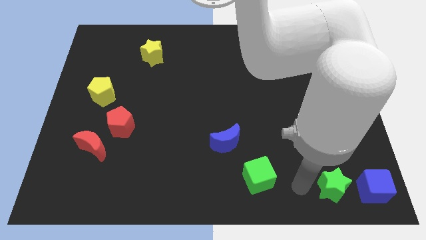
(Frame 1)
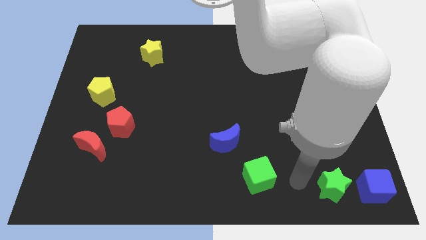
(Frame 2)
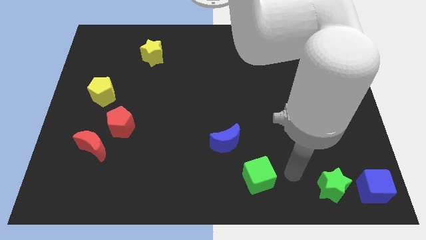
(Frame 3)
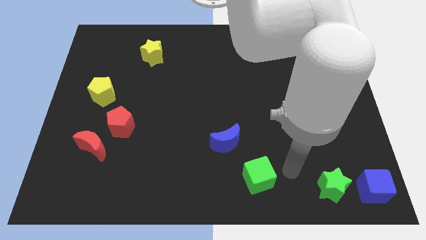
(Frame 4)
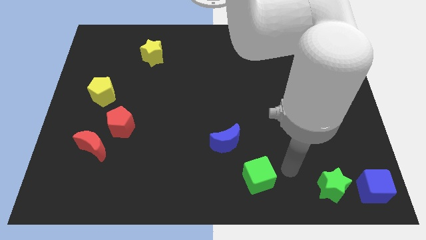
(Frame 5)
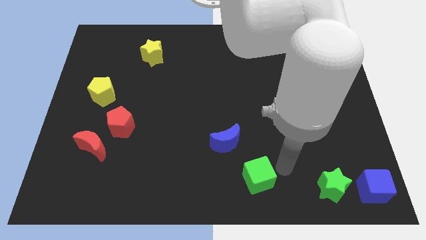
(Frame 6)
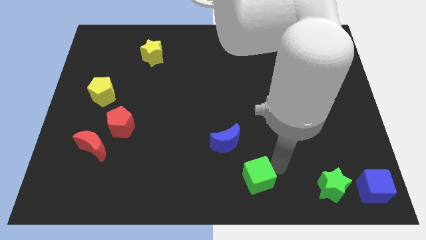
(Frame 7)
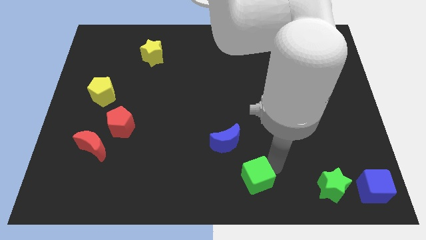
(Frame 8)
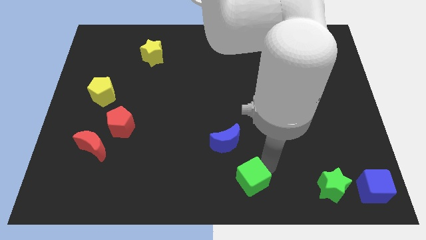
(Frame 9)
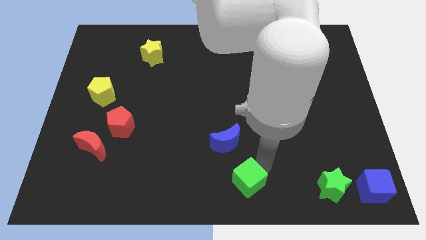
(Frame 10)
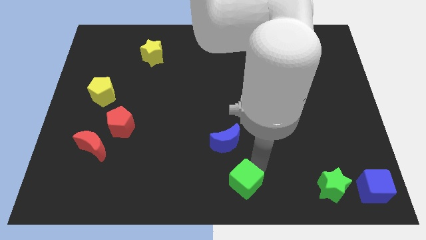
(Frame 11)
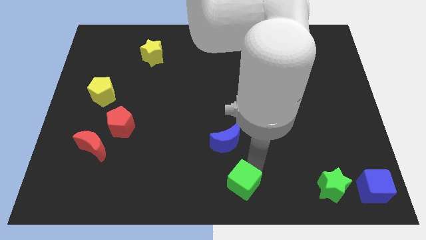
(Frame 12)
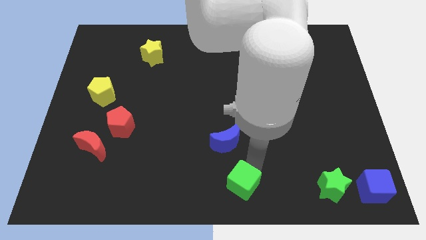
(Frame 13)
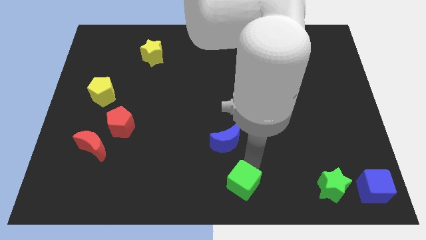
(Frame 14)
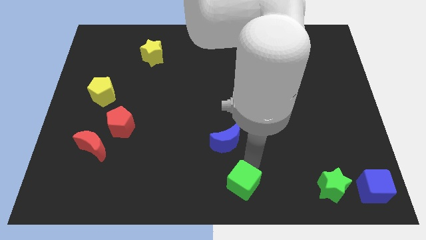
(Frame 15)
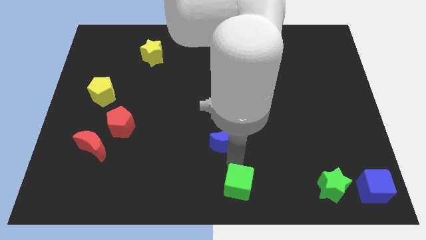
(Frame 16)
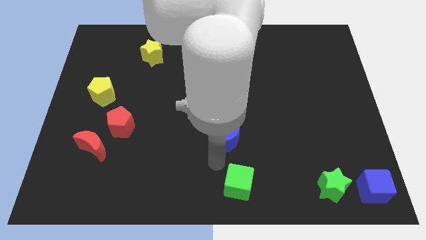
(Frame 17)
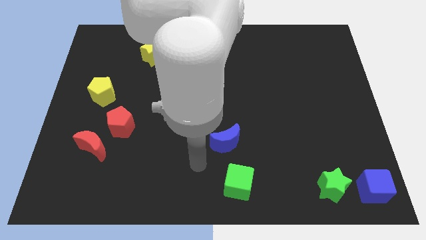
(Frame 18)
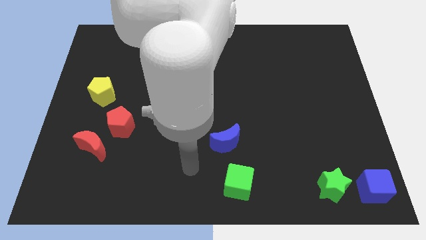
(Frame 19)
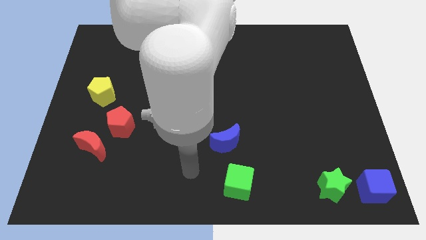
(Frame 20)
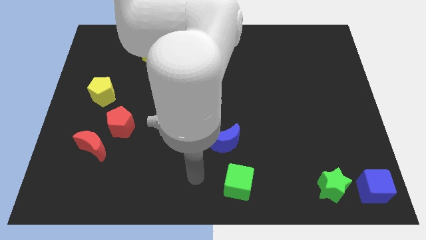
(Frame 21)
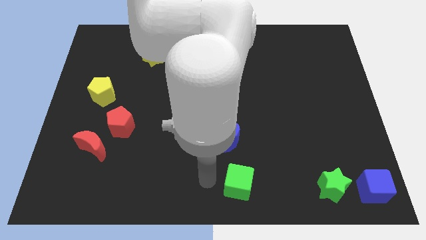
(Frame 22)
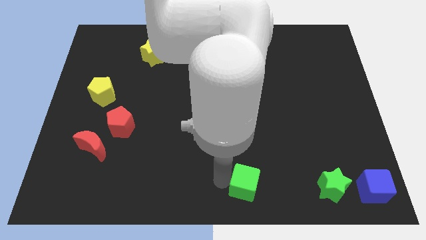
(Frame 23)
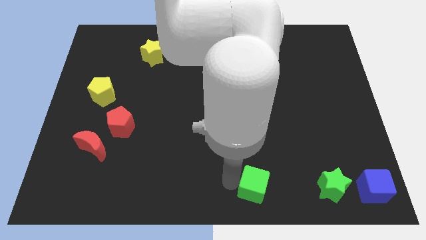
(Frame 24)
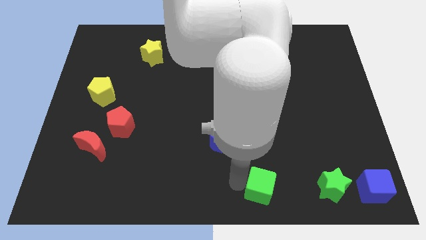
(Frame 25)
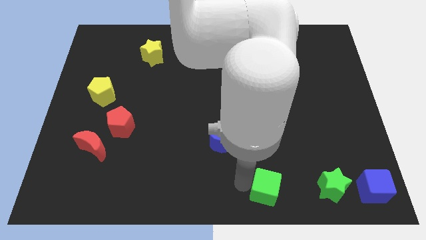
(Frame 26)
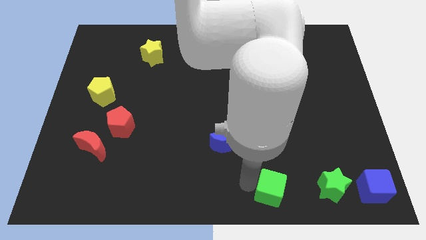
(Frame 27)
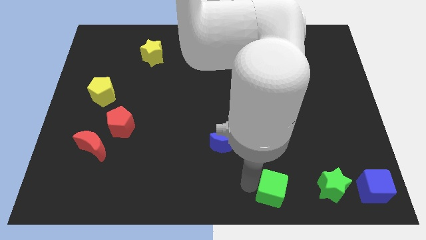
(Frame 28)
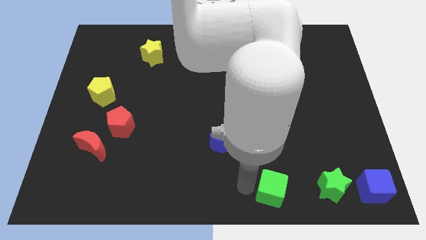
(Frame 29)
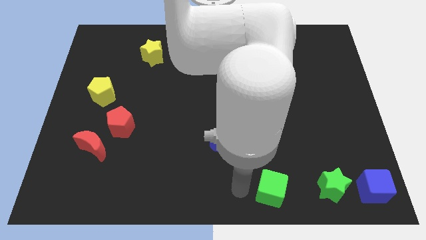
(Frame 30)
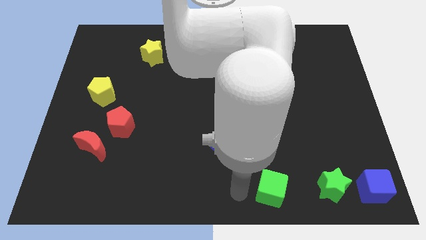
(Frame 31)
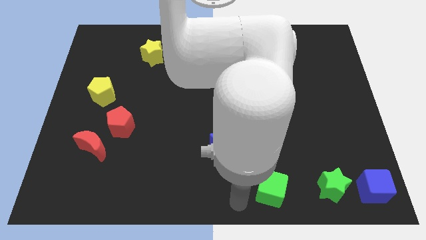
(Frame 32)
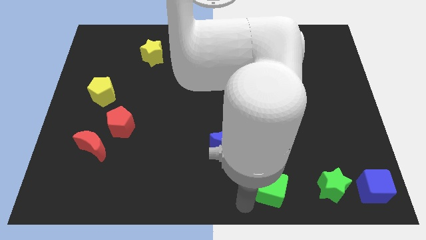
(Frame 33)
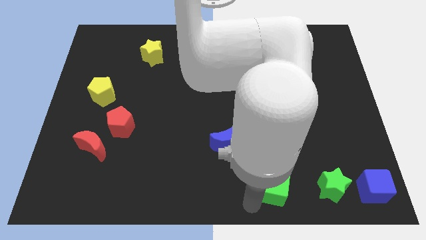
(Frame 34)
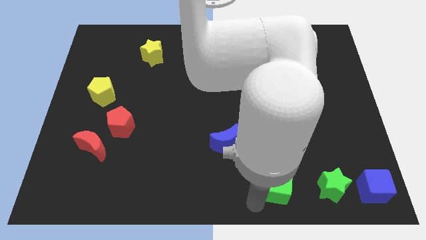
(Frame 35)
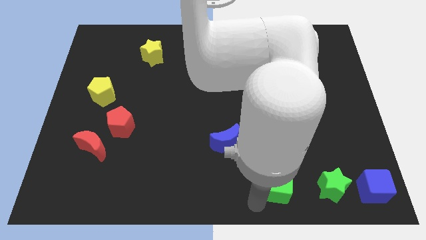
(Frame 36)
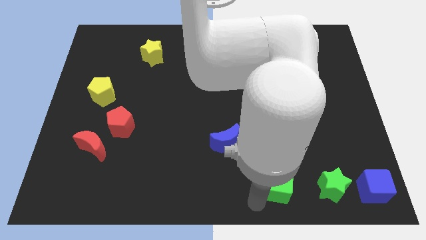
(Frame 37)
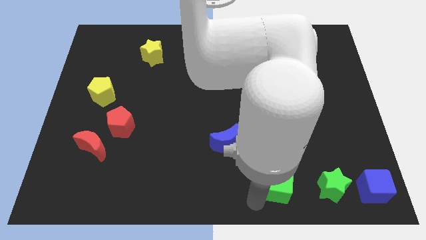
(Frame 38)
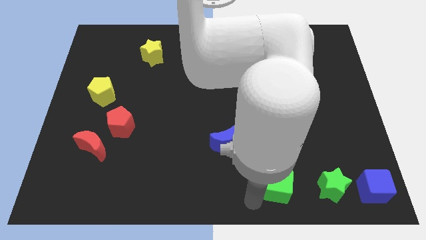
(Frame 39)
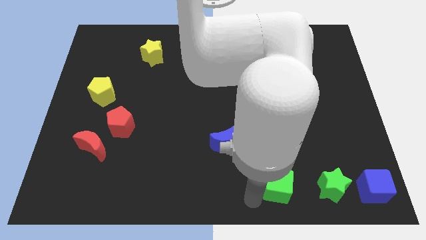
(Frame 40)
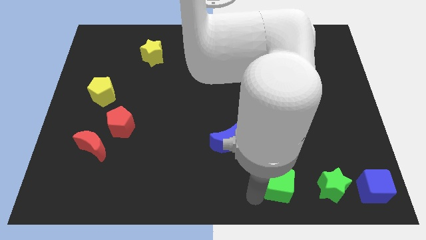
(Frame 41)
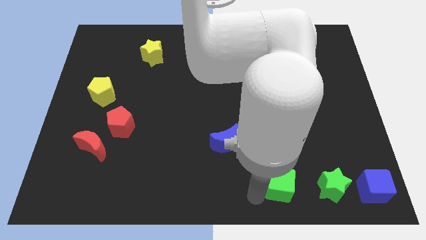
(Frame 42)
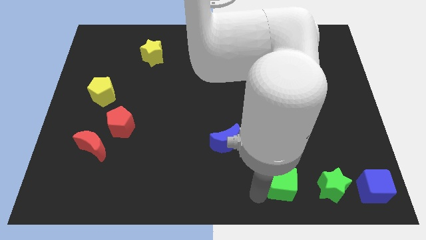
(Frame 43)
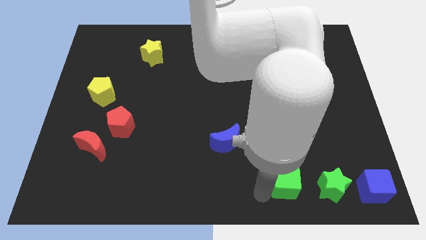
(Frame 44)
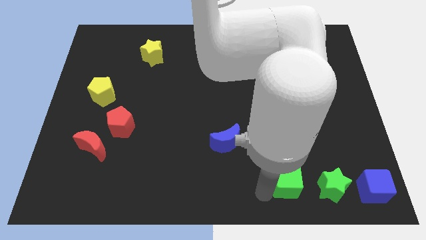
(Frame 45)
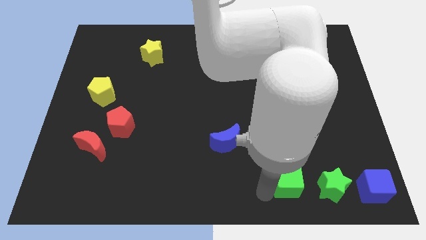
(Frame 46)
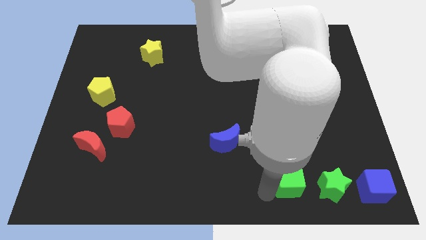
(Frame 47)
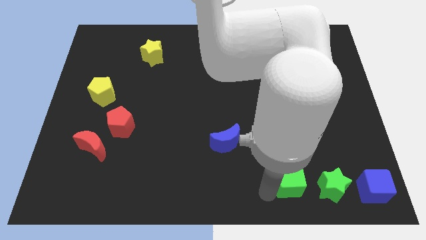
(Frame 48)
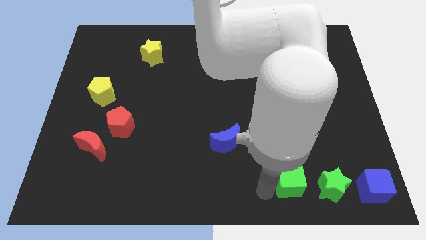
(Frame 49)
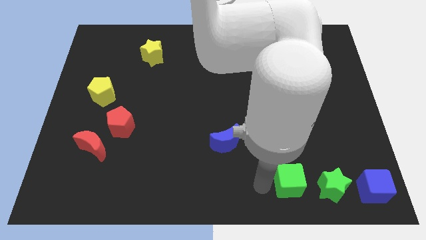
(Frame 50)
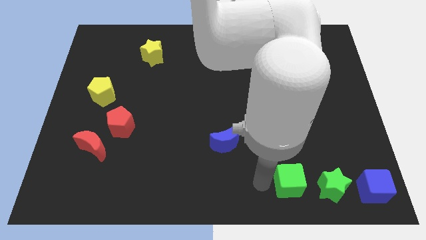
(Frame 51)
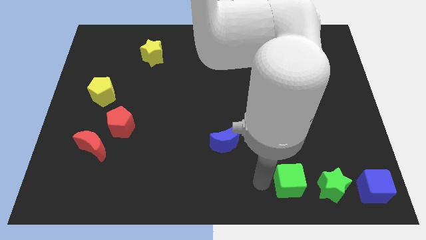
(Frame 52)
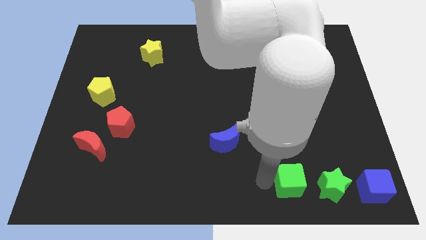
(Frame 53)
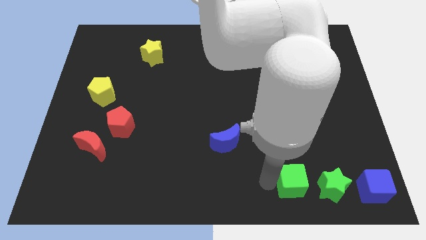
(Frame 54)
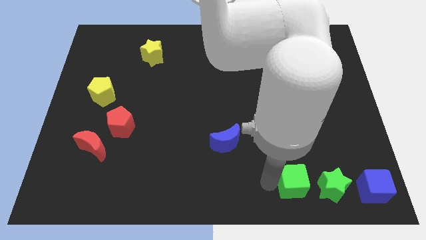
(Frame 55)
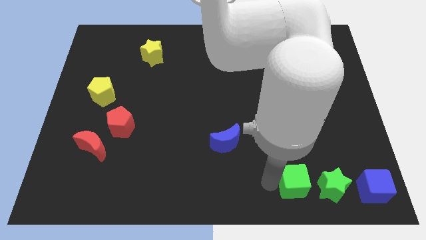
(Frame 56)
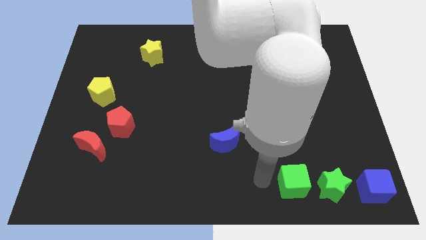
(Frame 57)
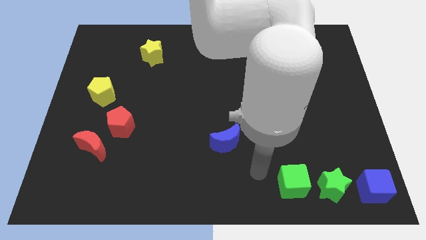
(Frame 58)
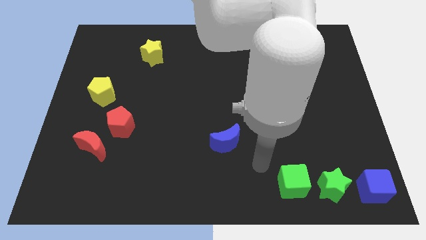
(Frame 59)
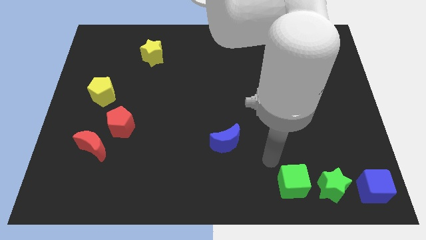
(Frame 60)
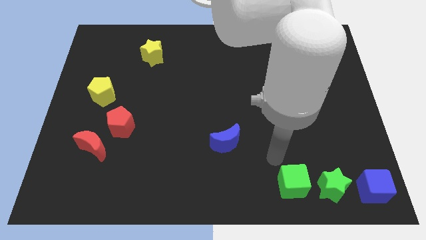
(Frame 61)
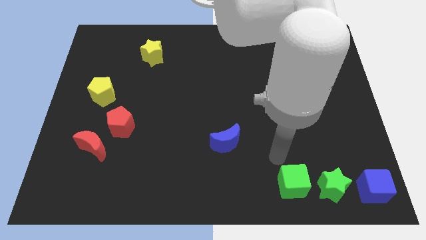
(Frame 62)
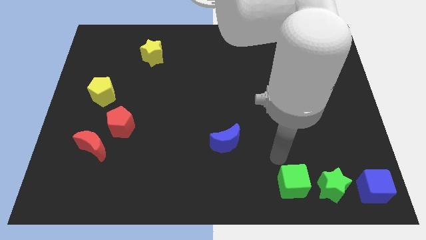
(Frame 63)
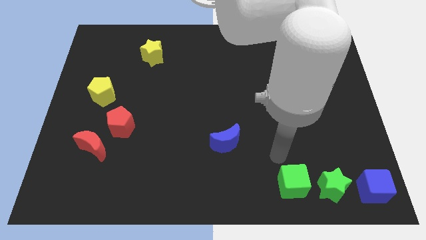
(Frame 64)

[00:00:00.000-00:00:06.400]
push green cube to the left of green star

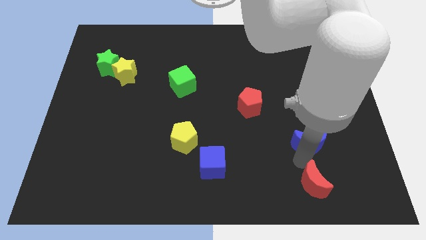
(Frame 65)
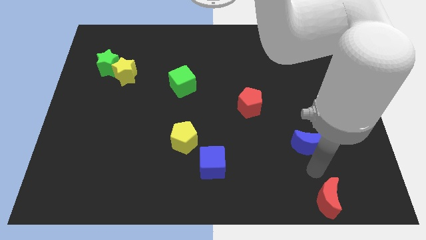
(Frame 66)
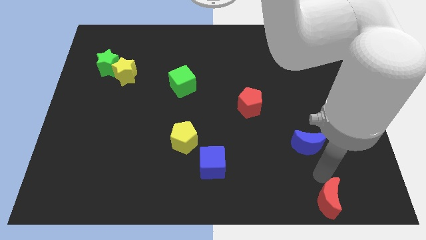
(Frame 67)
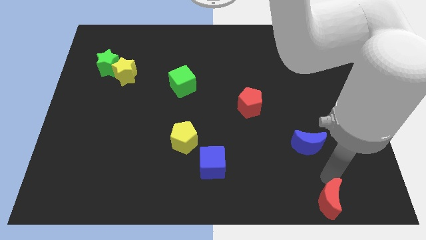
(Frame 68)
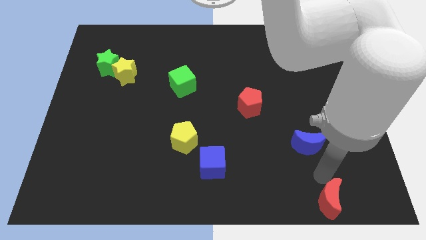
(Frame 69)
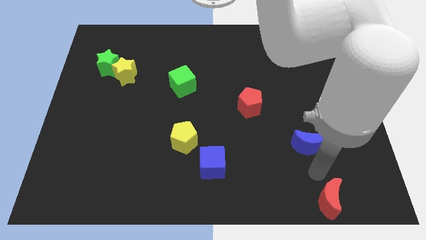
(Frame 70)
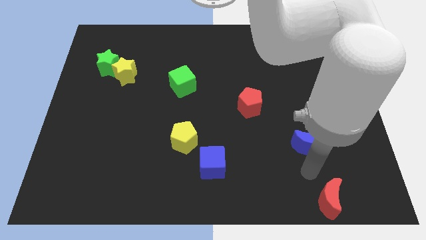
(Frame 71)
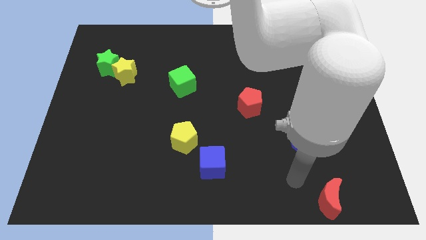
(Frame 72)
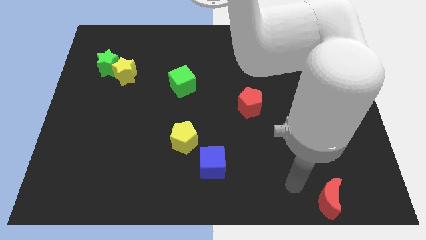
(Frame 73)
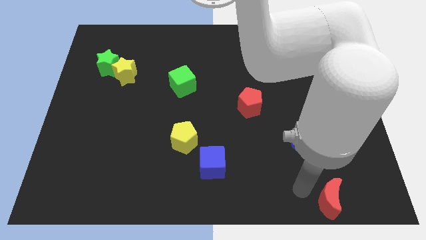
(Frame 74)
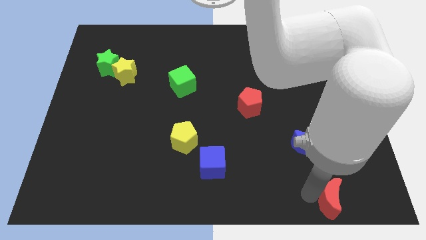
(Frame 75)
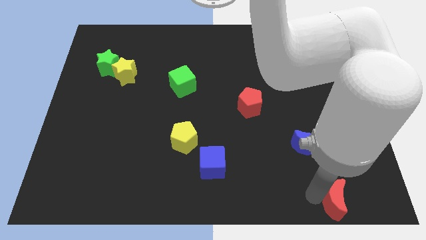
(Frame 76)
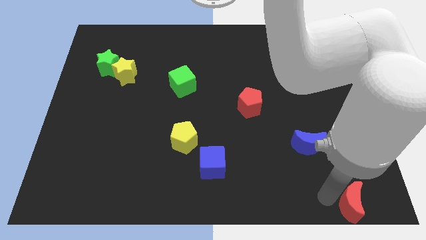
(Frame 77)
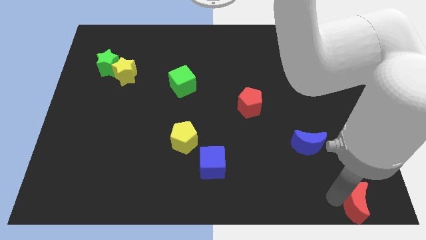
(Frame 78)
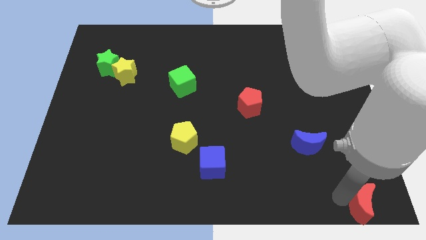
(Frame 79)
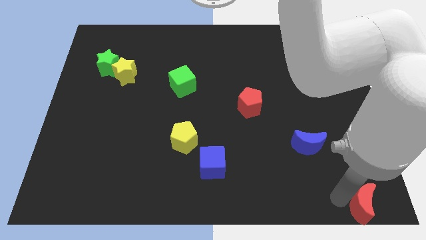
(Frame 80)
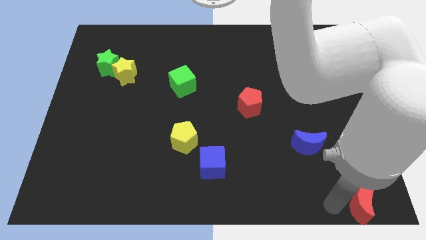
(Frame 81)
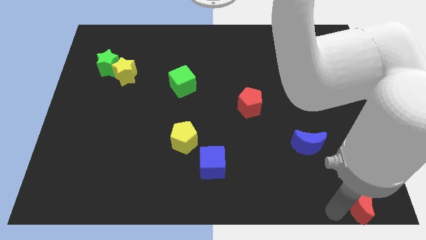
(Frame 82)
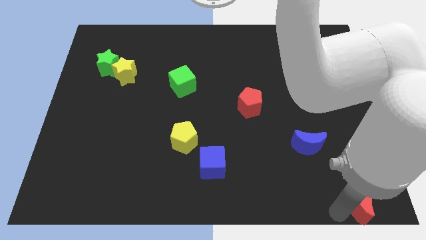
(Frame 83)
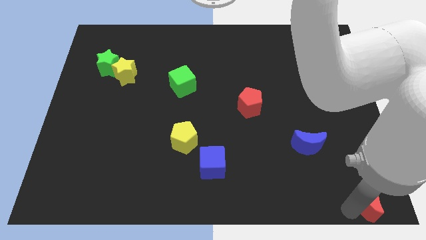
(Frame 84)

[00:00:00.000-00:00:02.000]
place the red crescent to the bottom left of board

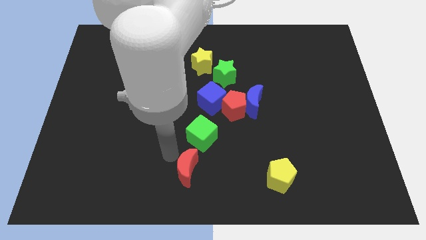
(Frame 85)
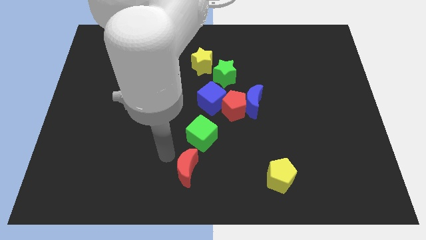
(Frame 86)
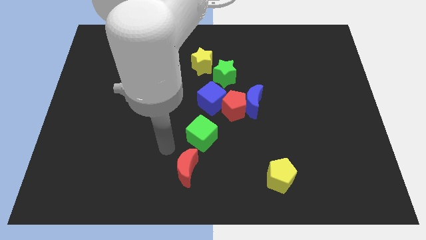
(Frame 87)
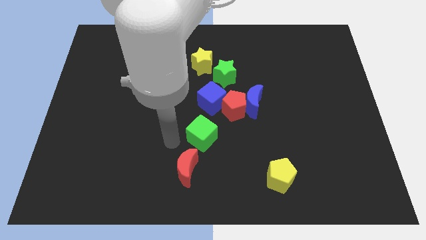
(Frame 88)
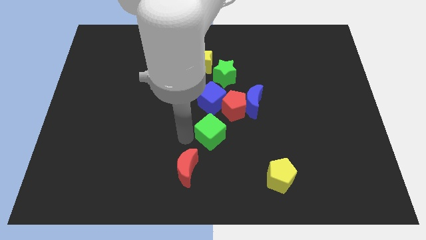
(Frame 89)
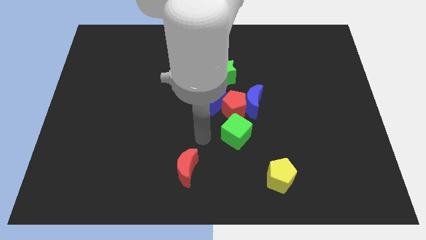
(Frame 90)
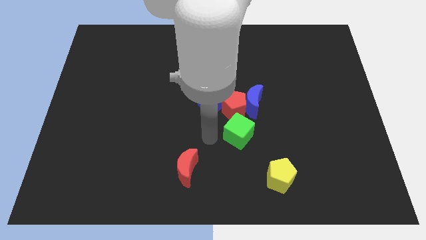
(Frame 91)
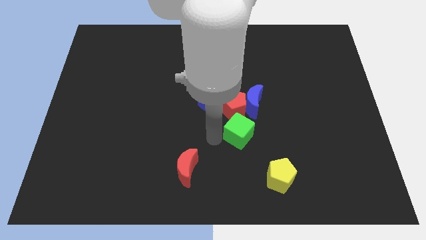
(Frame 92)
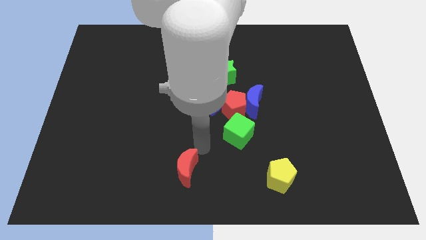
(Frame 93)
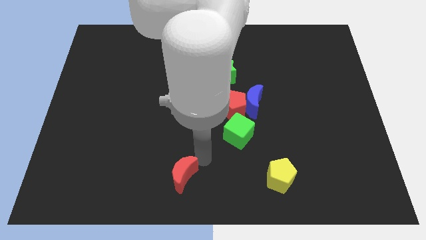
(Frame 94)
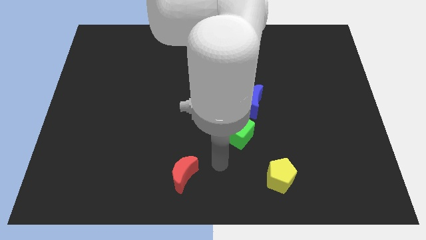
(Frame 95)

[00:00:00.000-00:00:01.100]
separate green cube from red moon
